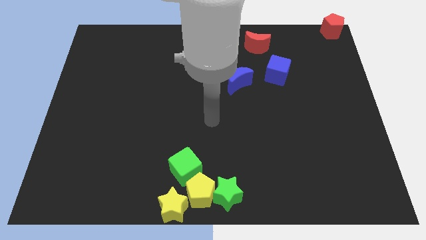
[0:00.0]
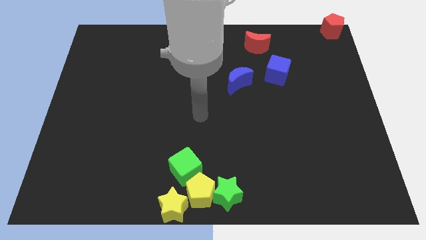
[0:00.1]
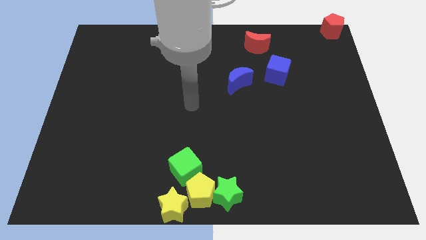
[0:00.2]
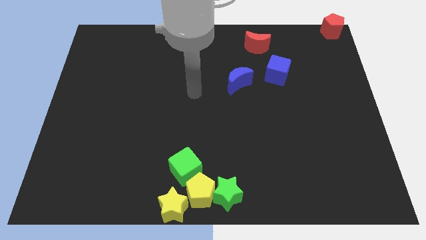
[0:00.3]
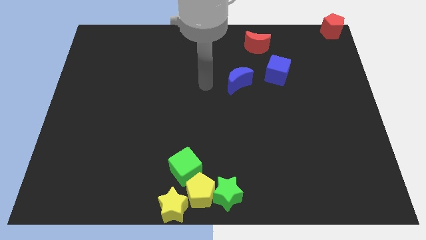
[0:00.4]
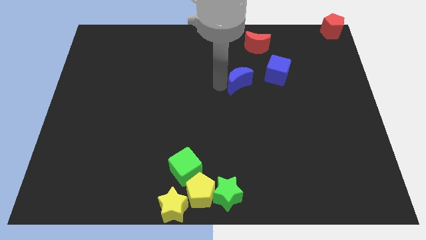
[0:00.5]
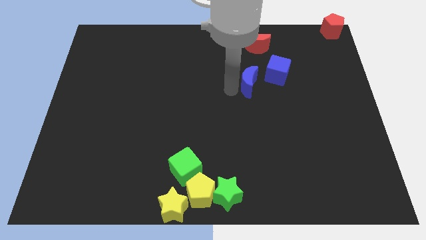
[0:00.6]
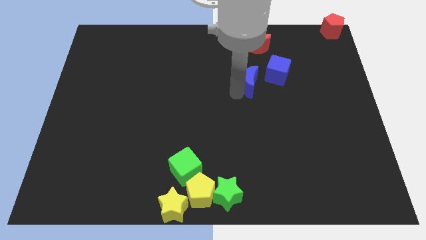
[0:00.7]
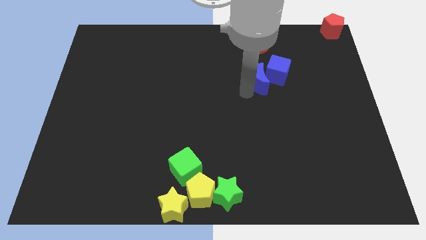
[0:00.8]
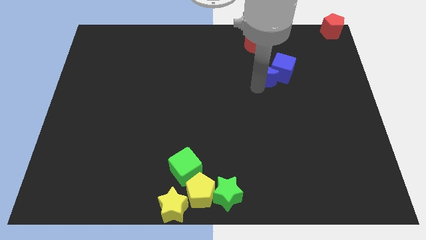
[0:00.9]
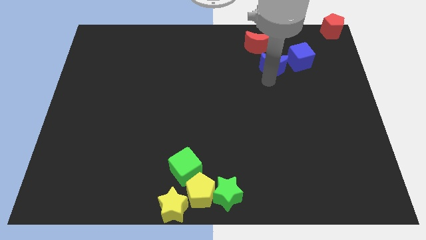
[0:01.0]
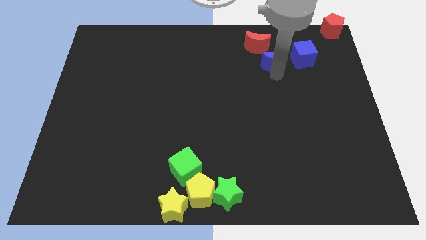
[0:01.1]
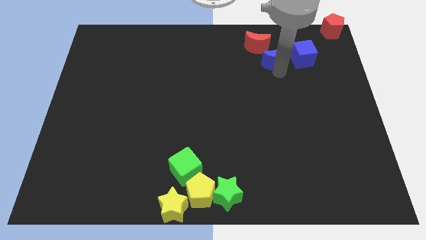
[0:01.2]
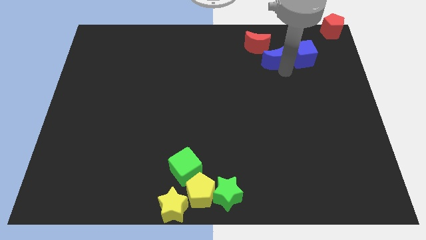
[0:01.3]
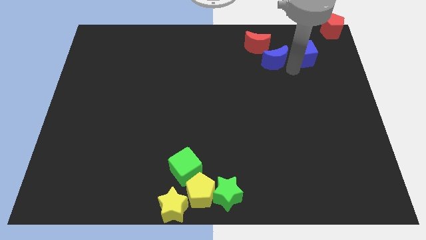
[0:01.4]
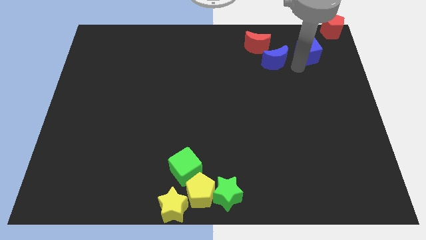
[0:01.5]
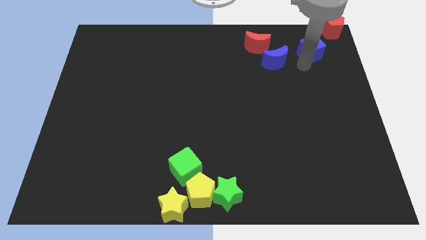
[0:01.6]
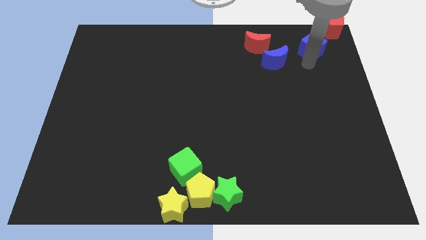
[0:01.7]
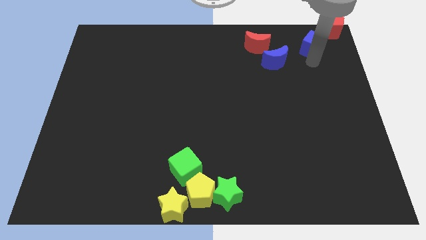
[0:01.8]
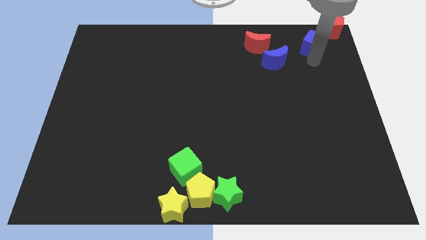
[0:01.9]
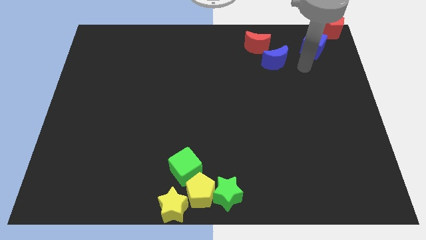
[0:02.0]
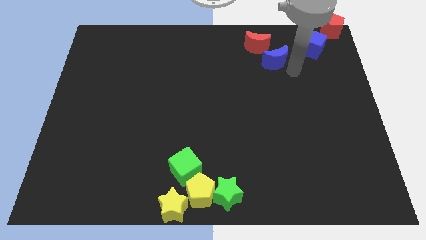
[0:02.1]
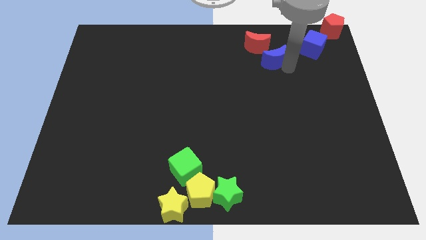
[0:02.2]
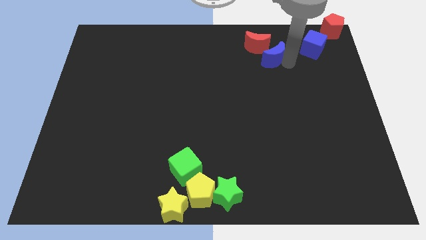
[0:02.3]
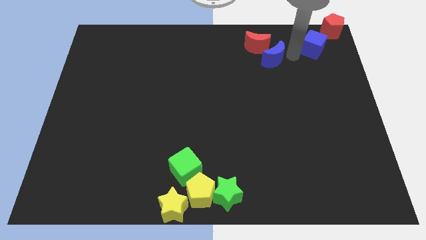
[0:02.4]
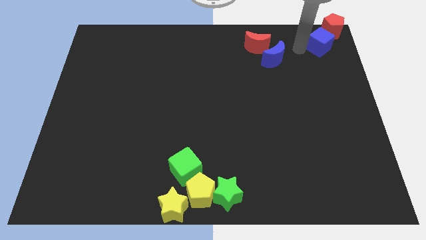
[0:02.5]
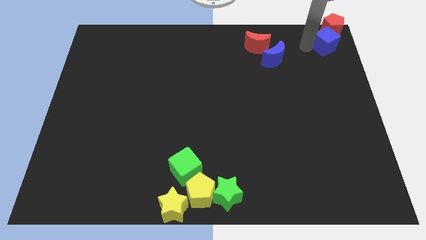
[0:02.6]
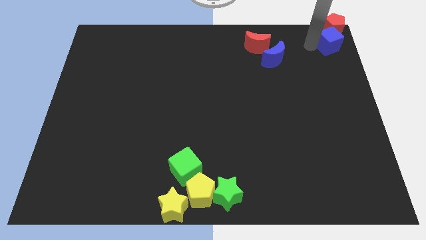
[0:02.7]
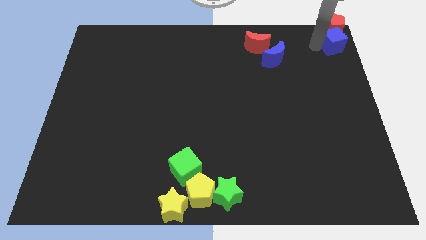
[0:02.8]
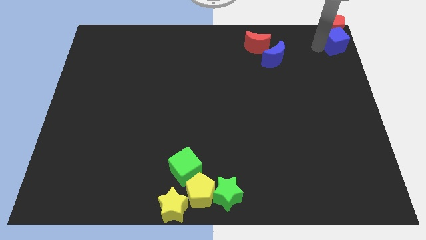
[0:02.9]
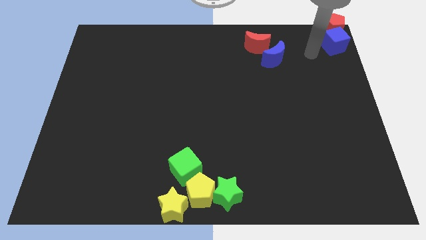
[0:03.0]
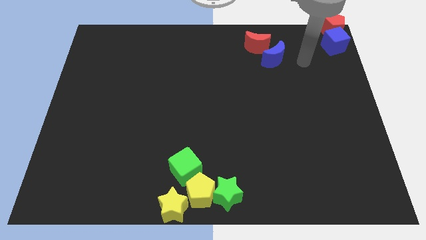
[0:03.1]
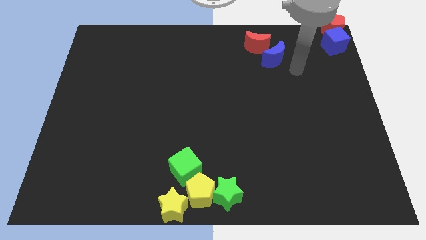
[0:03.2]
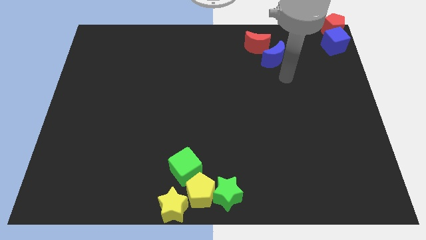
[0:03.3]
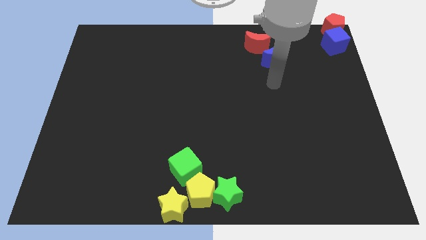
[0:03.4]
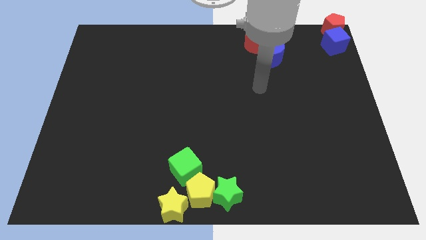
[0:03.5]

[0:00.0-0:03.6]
move the blue cube below the red pentagon

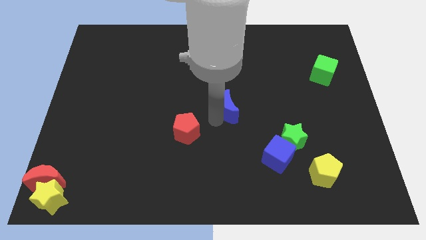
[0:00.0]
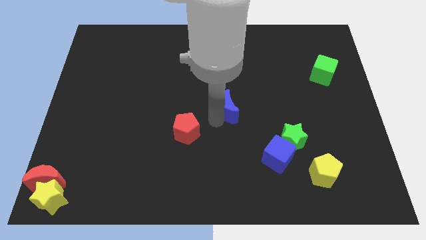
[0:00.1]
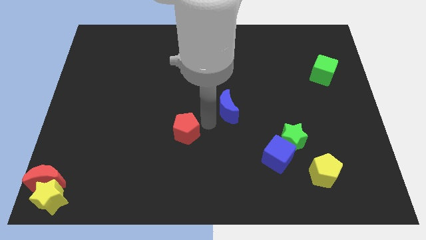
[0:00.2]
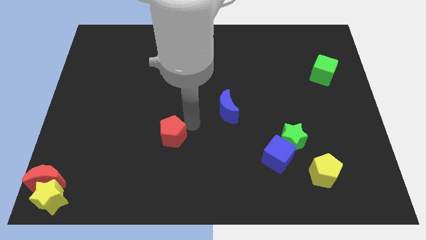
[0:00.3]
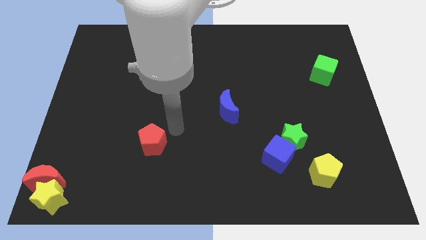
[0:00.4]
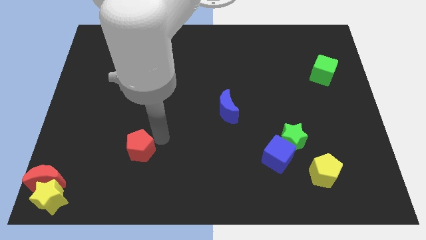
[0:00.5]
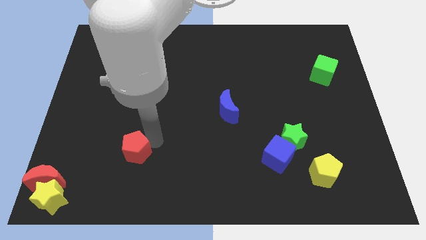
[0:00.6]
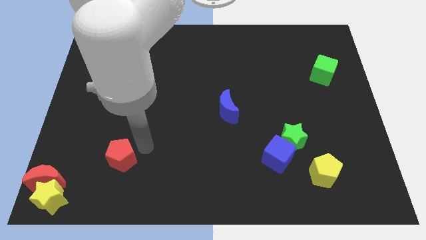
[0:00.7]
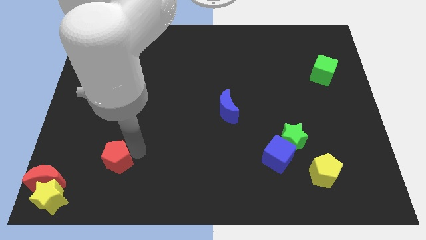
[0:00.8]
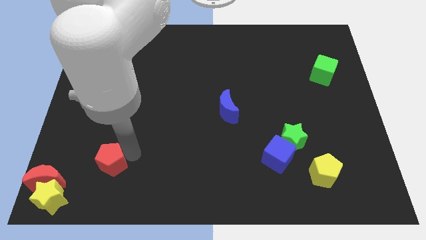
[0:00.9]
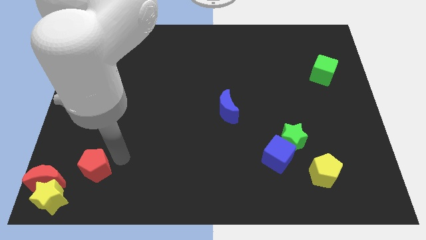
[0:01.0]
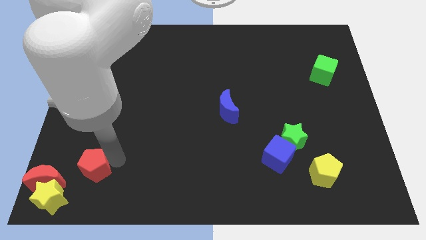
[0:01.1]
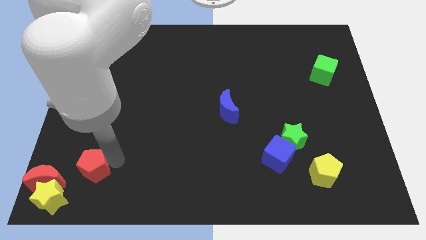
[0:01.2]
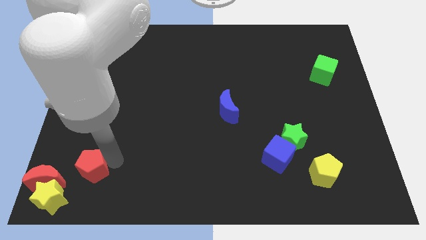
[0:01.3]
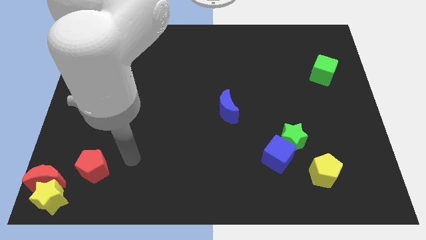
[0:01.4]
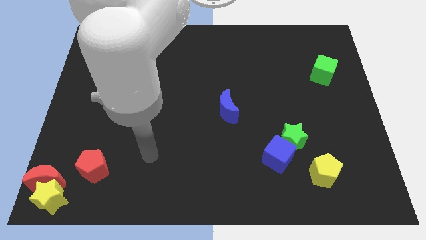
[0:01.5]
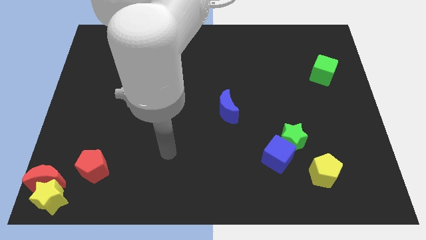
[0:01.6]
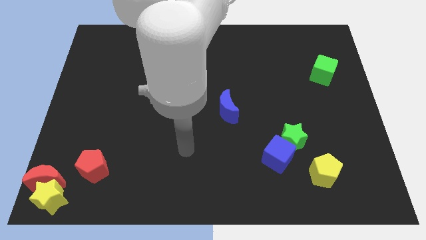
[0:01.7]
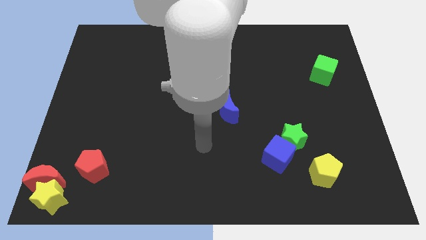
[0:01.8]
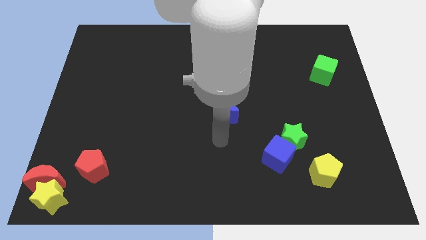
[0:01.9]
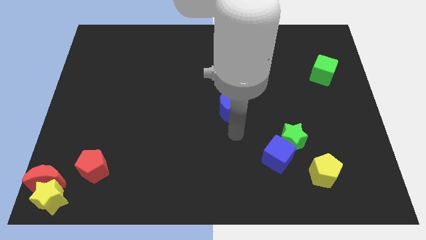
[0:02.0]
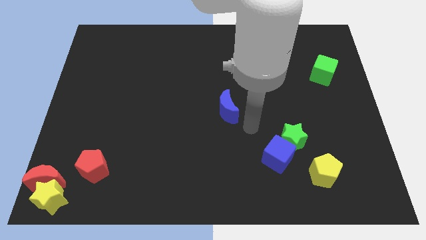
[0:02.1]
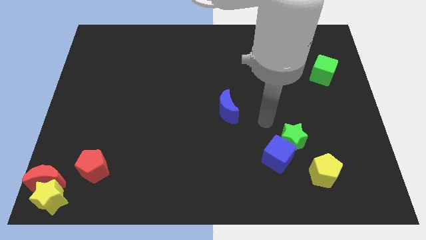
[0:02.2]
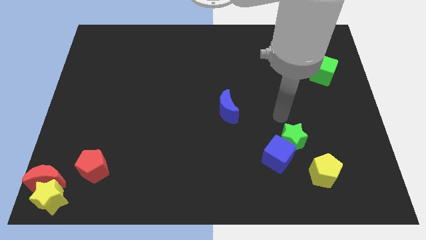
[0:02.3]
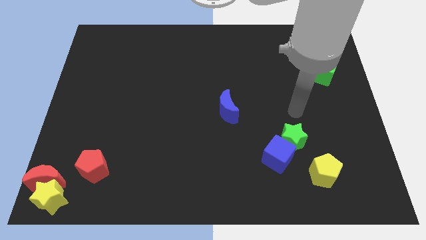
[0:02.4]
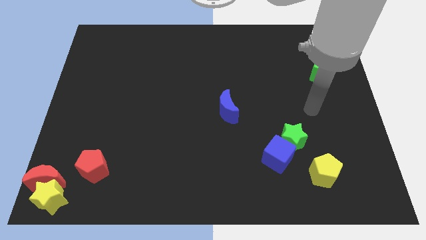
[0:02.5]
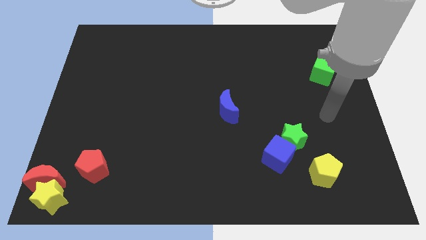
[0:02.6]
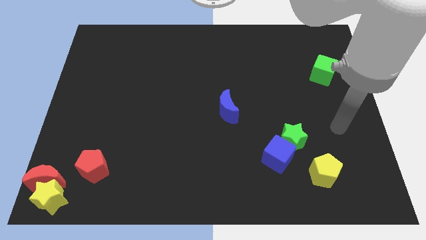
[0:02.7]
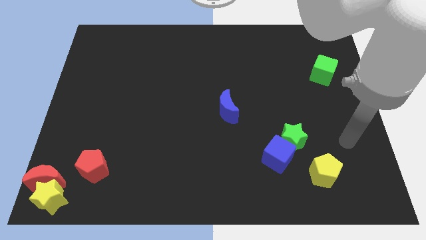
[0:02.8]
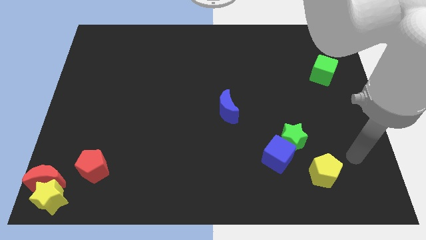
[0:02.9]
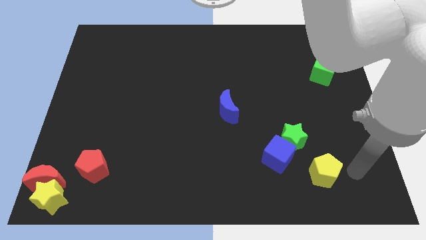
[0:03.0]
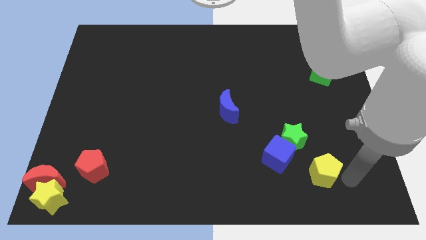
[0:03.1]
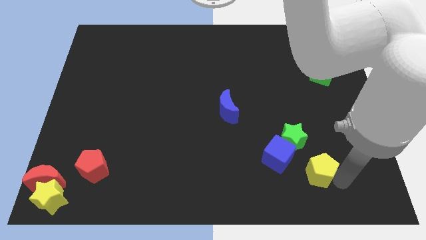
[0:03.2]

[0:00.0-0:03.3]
place the arm near the yellow pentagon

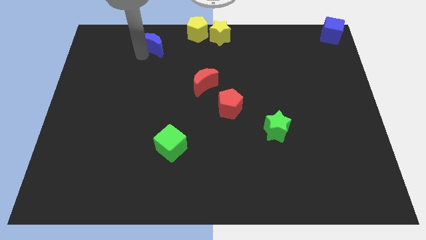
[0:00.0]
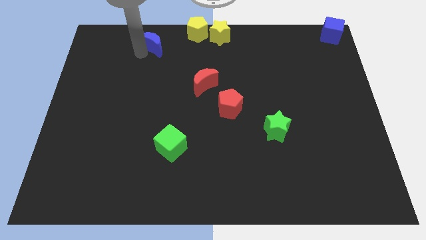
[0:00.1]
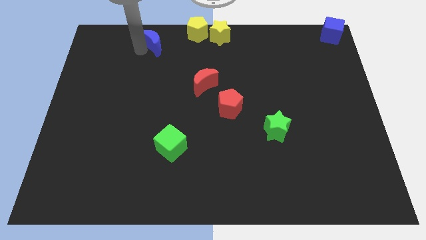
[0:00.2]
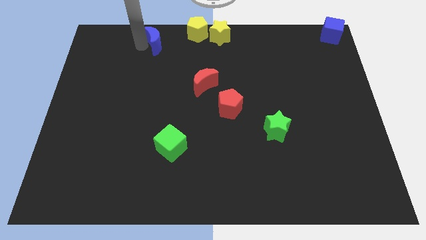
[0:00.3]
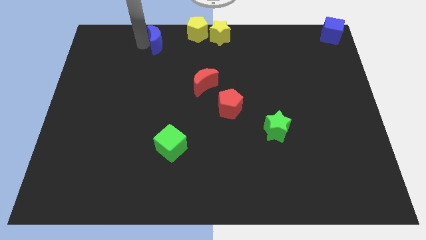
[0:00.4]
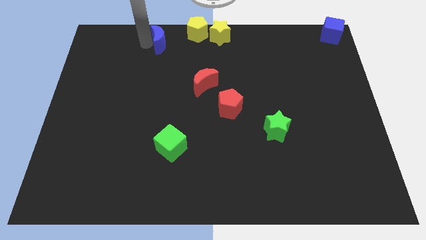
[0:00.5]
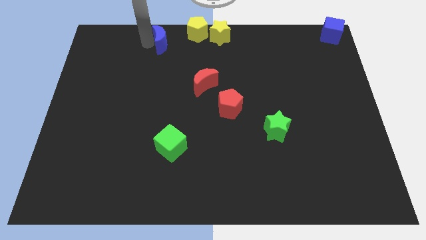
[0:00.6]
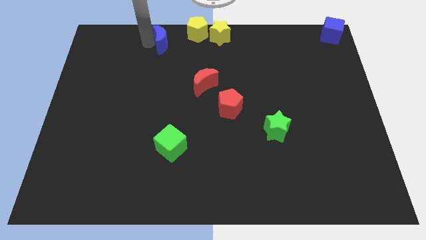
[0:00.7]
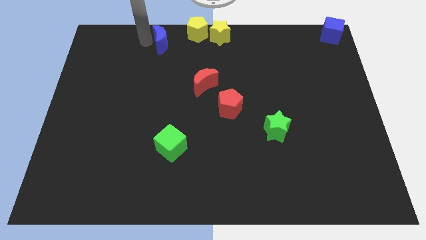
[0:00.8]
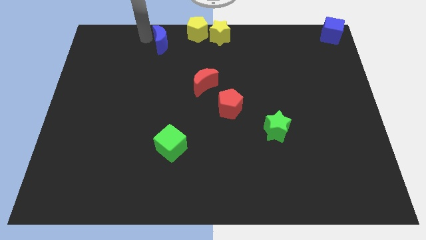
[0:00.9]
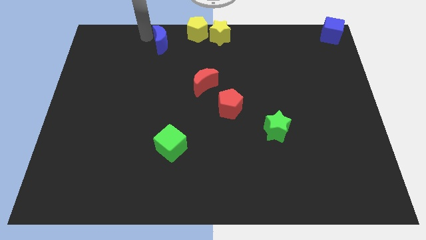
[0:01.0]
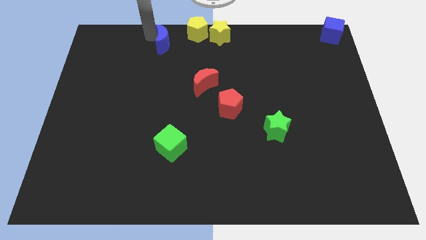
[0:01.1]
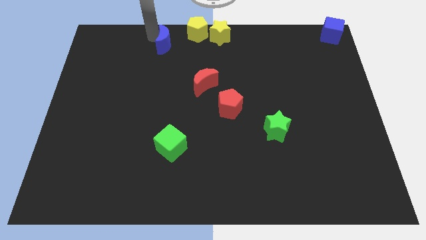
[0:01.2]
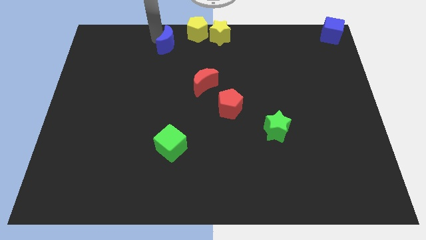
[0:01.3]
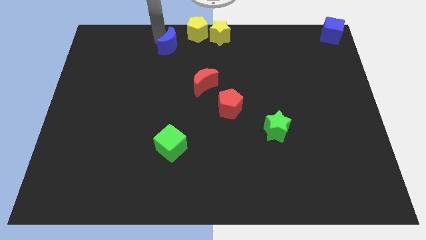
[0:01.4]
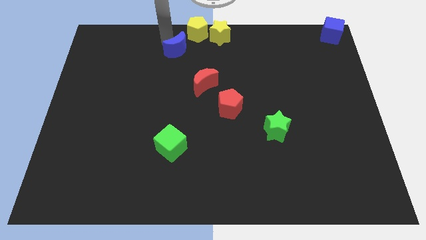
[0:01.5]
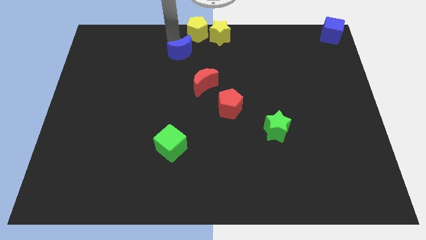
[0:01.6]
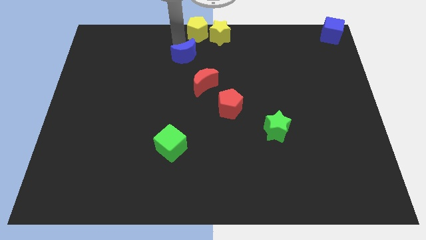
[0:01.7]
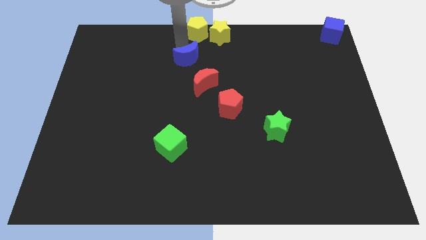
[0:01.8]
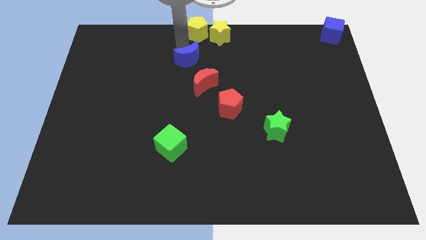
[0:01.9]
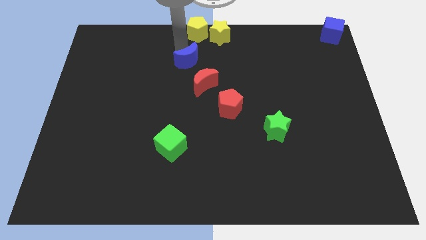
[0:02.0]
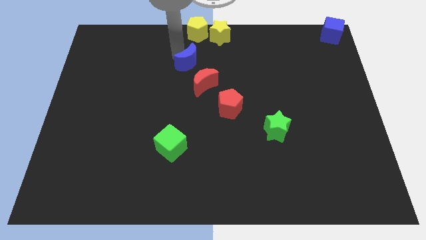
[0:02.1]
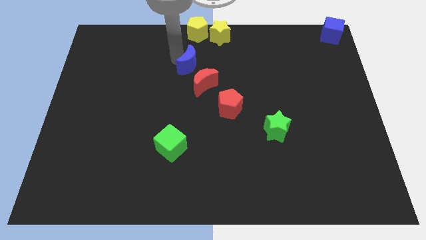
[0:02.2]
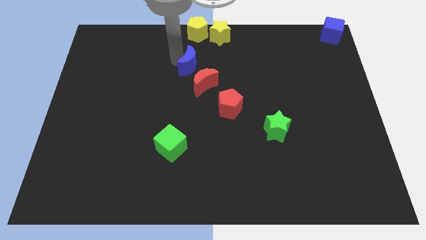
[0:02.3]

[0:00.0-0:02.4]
move the blue moon towards the red moon

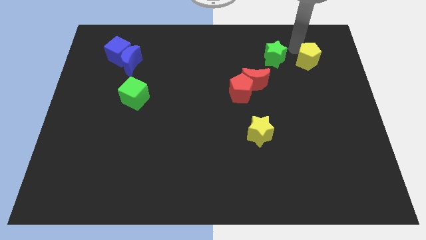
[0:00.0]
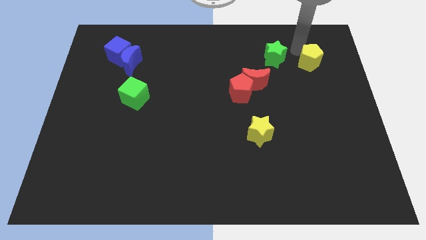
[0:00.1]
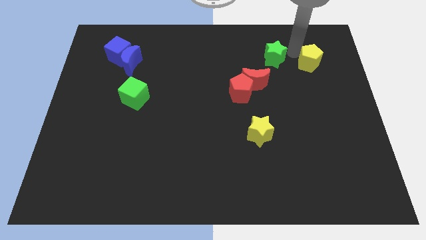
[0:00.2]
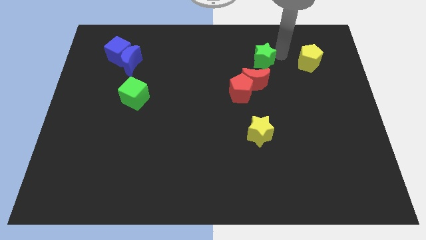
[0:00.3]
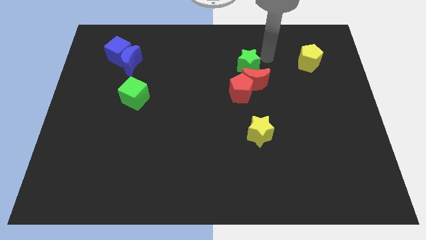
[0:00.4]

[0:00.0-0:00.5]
push green star above red crescent
